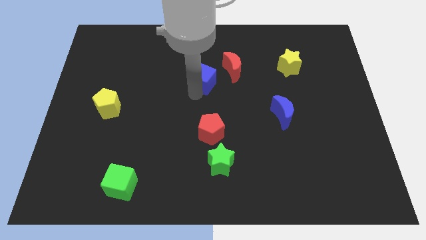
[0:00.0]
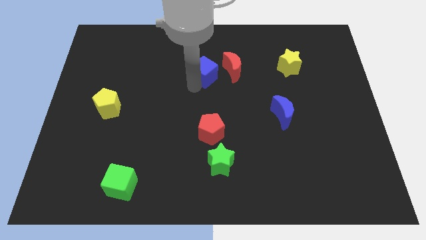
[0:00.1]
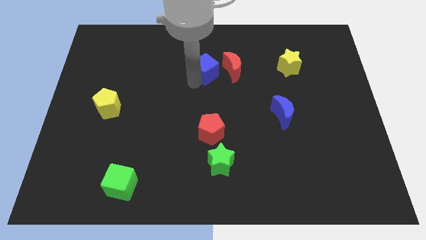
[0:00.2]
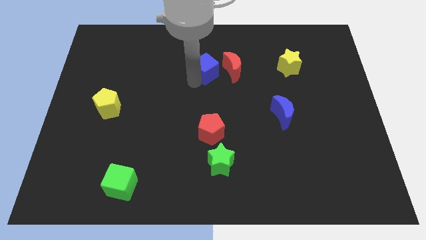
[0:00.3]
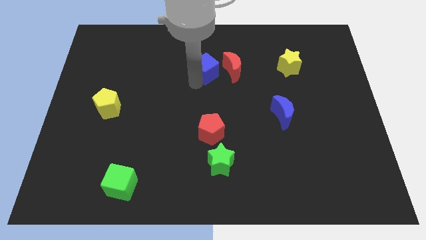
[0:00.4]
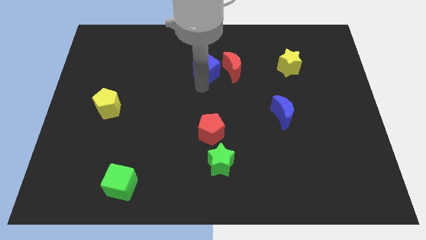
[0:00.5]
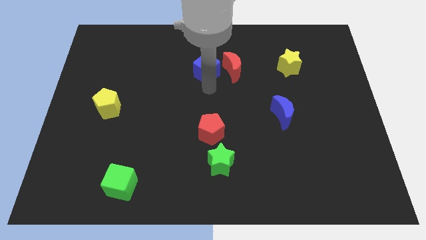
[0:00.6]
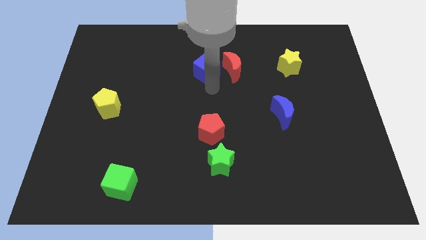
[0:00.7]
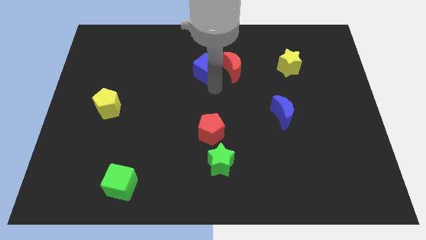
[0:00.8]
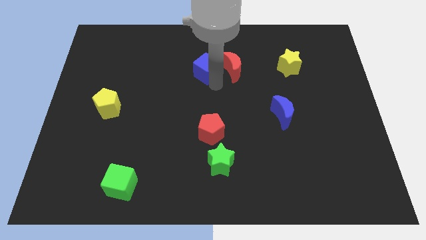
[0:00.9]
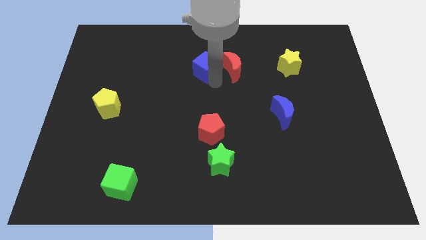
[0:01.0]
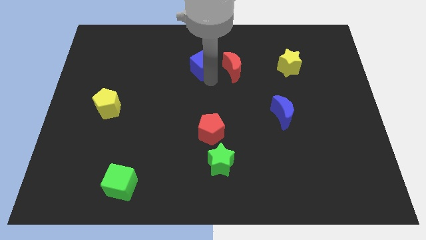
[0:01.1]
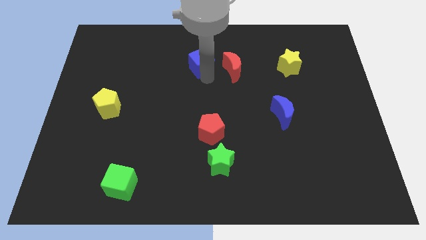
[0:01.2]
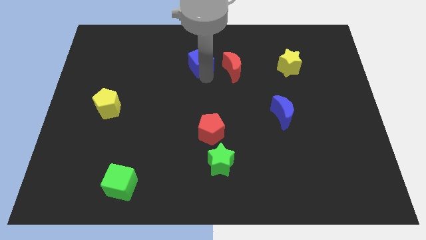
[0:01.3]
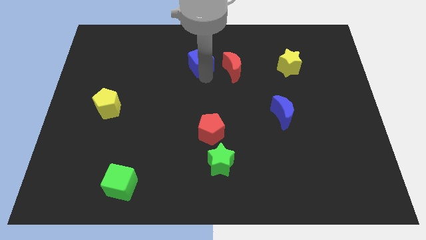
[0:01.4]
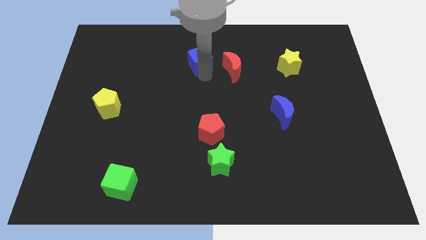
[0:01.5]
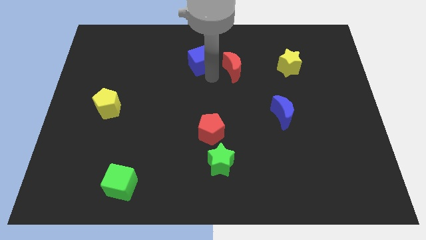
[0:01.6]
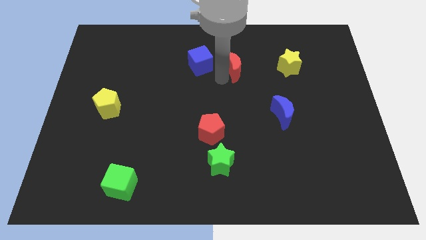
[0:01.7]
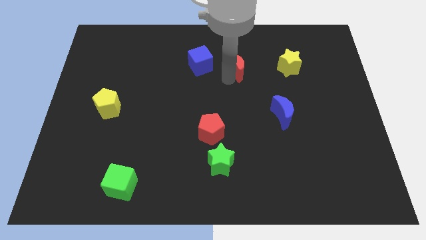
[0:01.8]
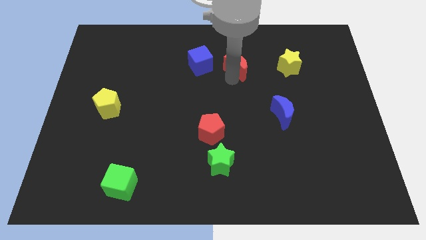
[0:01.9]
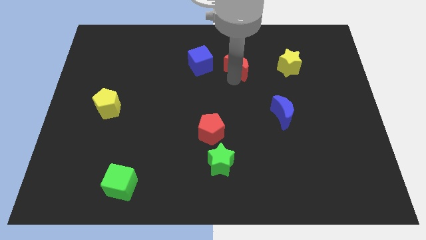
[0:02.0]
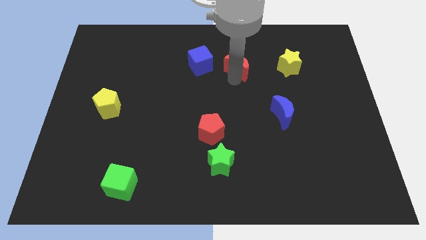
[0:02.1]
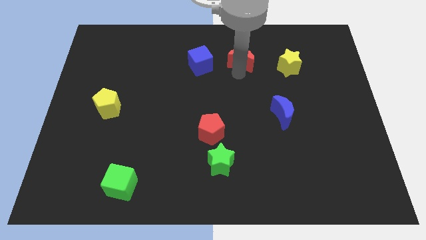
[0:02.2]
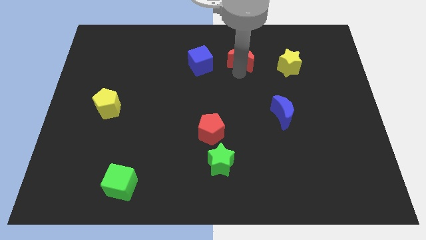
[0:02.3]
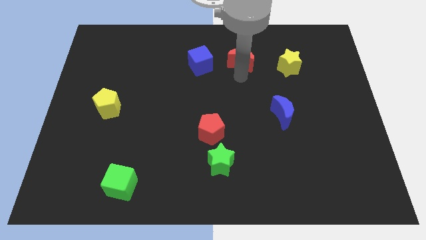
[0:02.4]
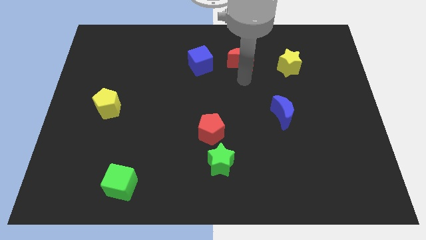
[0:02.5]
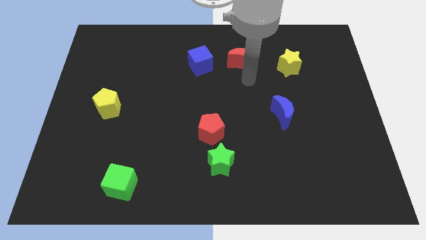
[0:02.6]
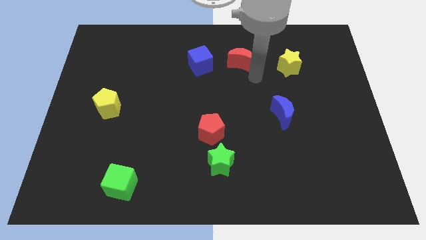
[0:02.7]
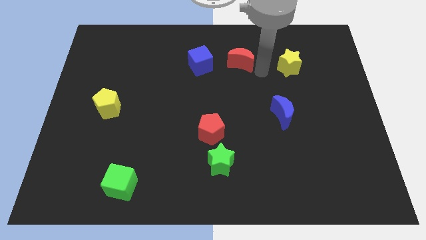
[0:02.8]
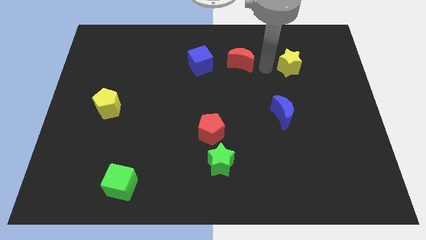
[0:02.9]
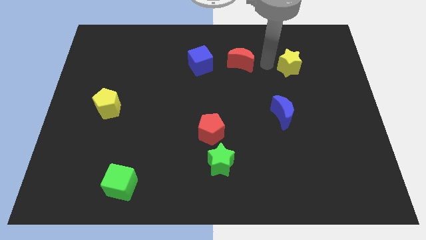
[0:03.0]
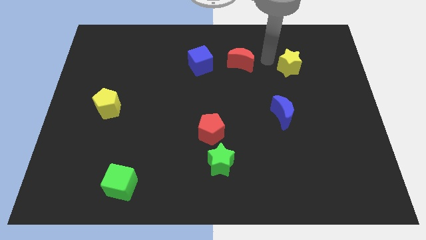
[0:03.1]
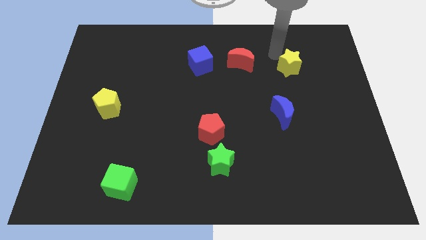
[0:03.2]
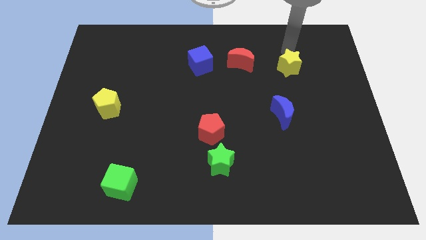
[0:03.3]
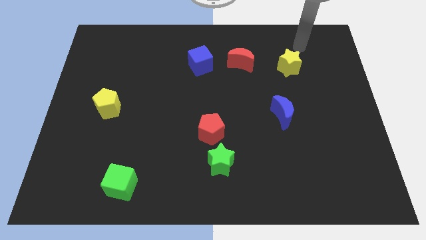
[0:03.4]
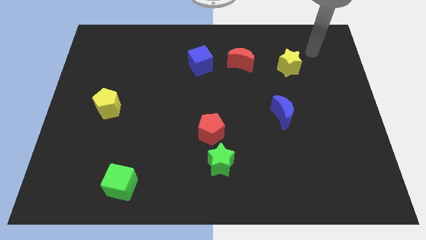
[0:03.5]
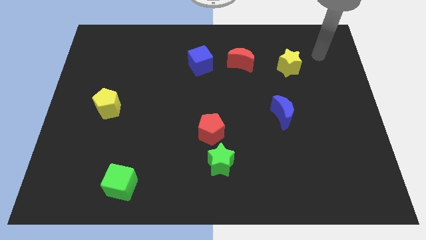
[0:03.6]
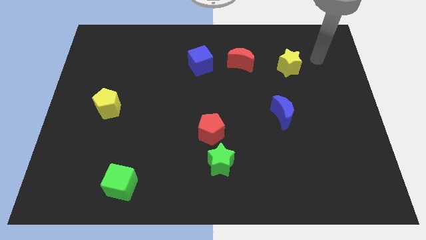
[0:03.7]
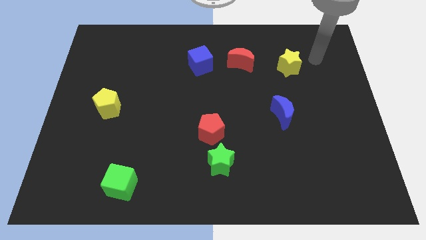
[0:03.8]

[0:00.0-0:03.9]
adjust the red moon and the blue cube parallel to each other

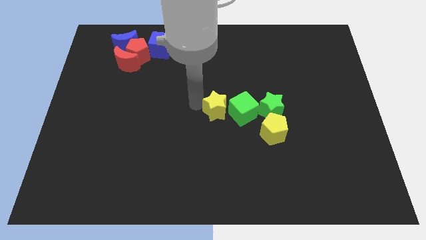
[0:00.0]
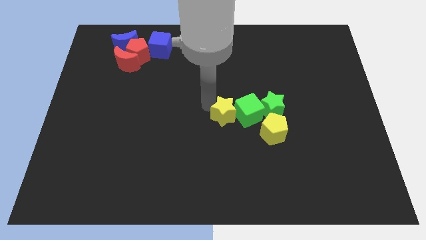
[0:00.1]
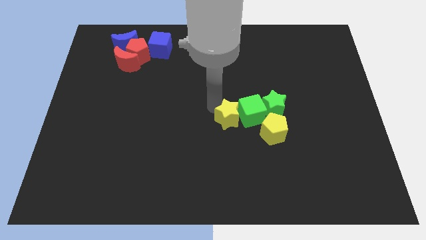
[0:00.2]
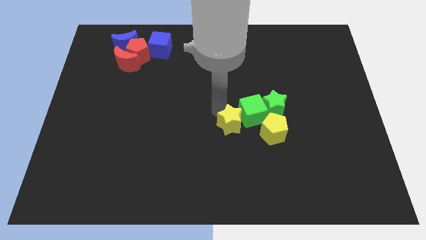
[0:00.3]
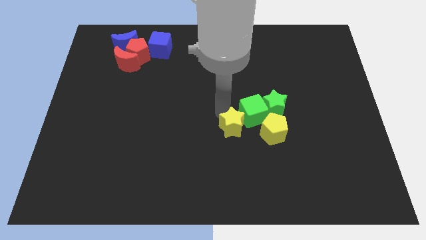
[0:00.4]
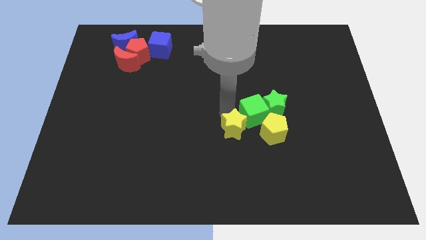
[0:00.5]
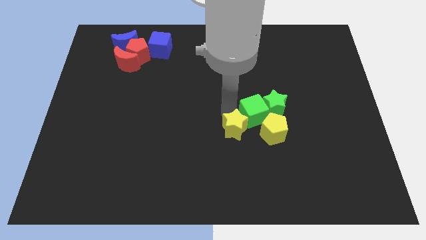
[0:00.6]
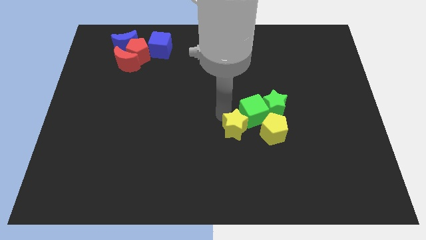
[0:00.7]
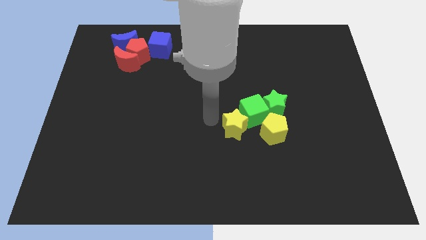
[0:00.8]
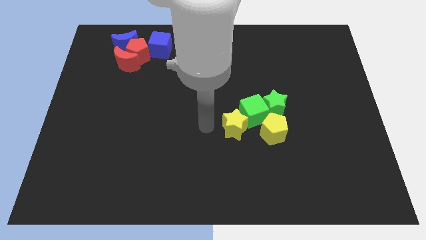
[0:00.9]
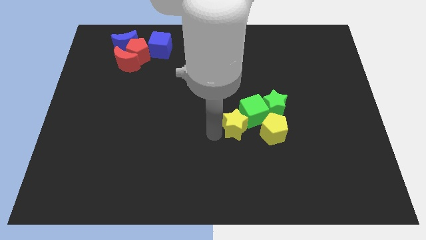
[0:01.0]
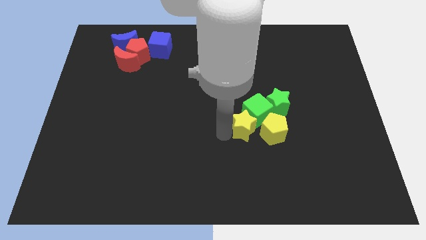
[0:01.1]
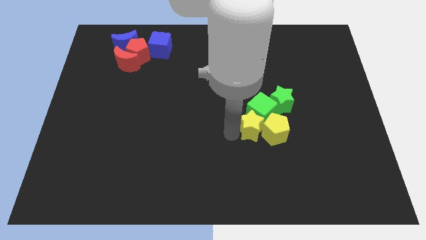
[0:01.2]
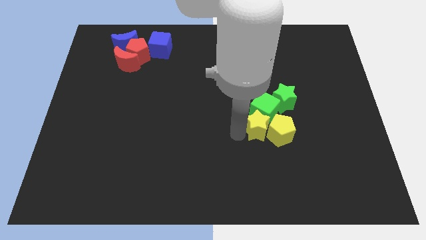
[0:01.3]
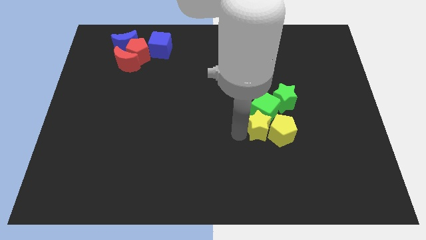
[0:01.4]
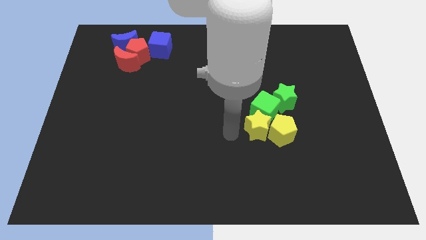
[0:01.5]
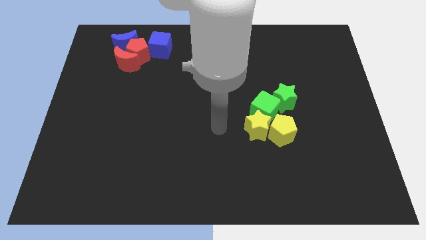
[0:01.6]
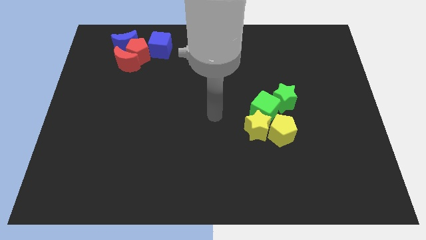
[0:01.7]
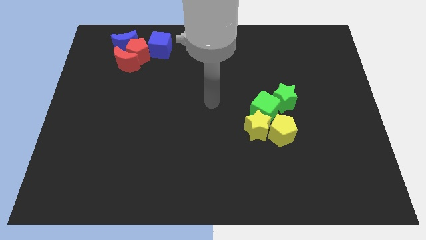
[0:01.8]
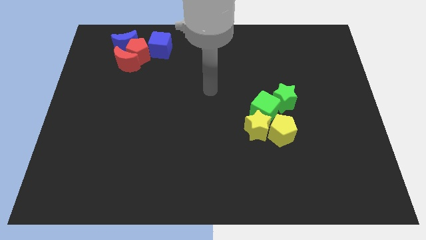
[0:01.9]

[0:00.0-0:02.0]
push the yellow star to the left side of the yellow pentagon

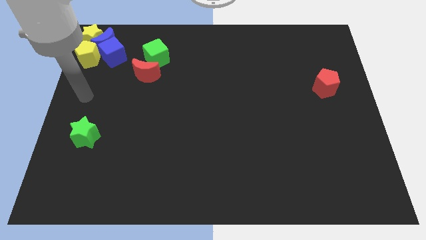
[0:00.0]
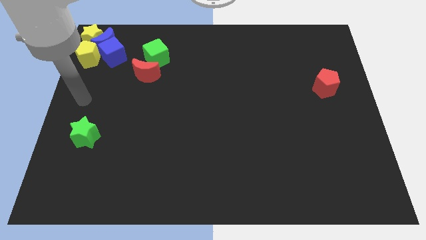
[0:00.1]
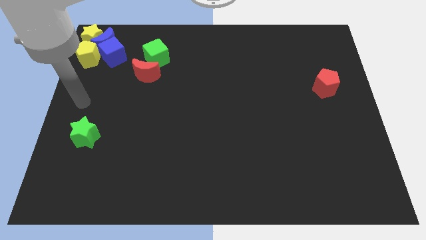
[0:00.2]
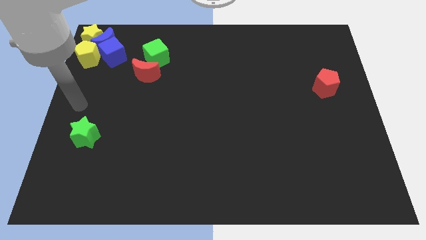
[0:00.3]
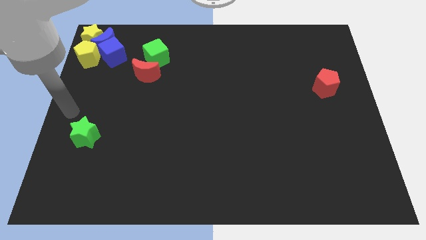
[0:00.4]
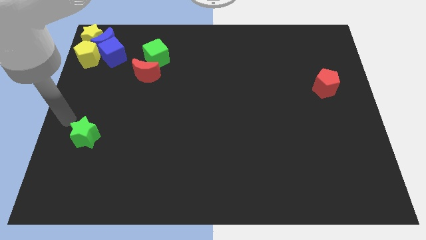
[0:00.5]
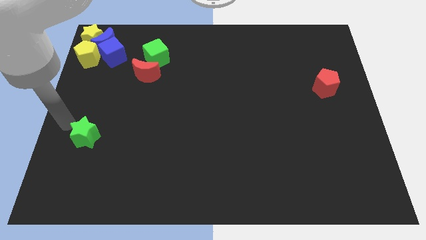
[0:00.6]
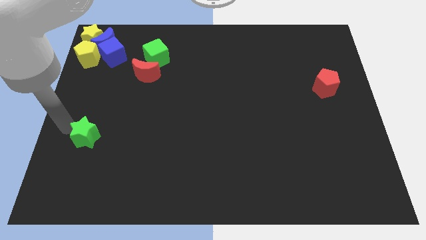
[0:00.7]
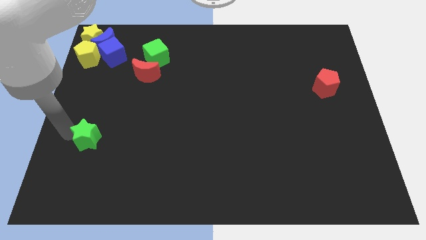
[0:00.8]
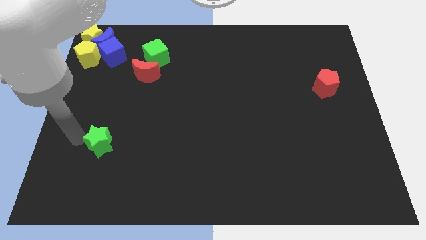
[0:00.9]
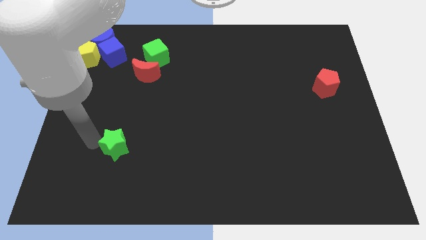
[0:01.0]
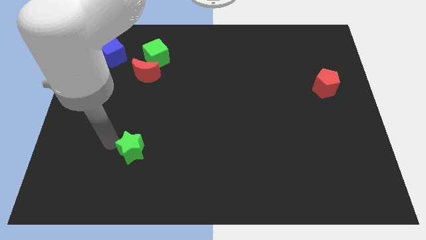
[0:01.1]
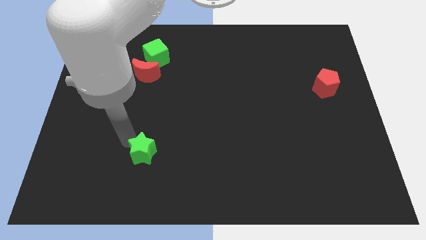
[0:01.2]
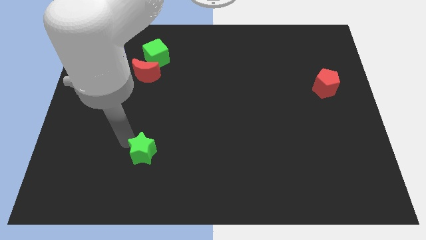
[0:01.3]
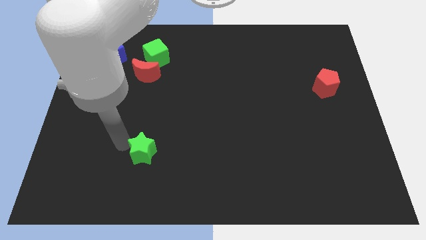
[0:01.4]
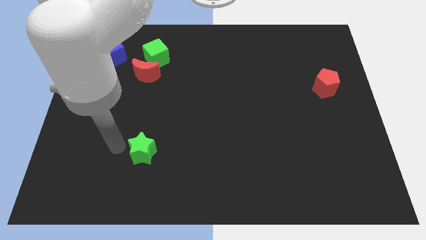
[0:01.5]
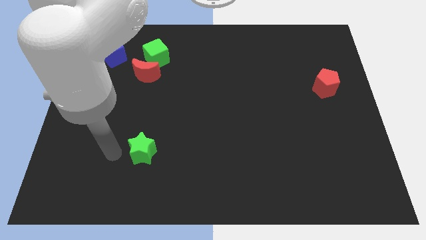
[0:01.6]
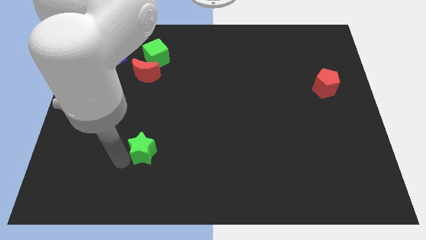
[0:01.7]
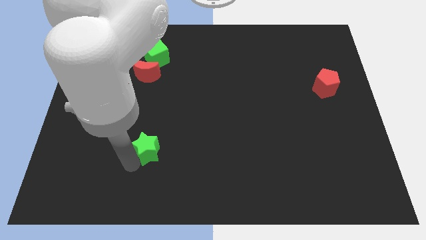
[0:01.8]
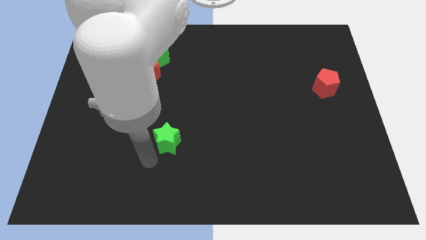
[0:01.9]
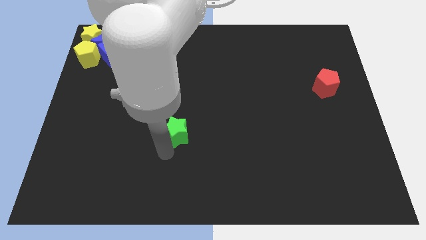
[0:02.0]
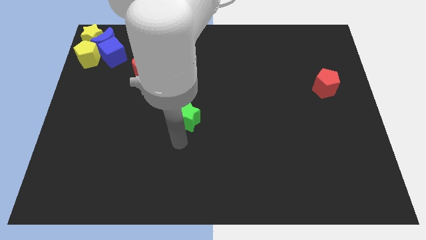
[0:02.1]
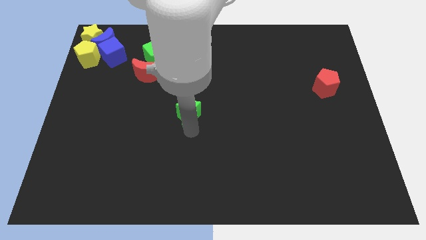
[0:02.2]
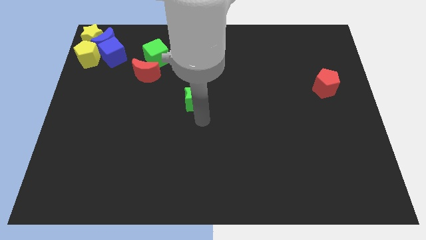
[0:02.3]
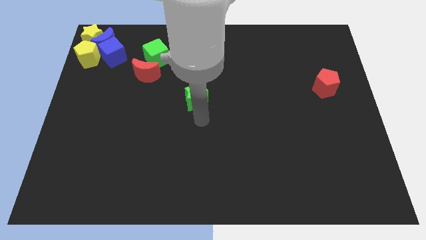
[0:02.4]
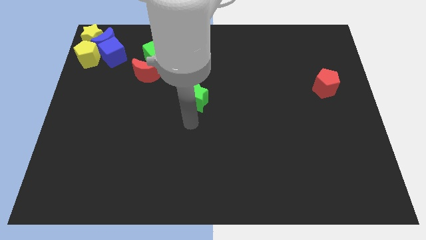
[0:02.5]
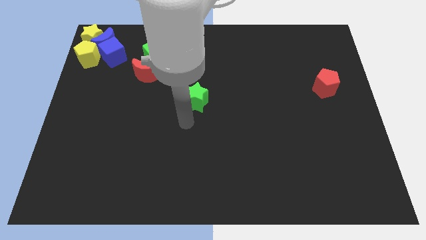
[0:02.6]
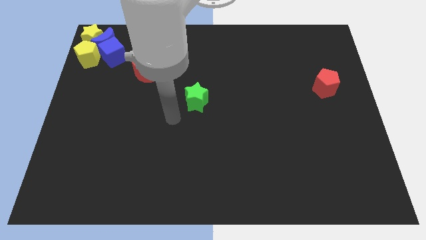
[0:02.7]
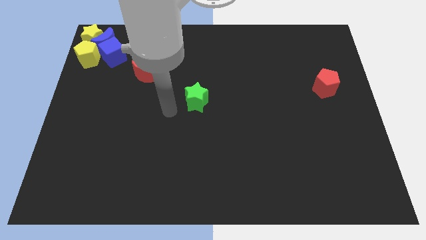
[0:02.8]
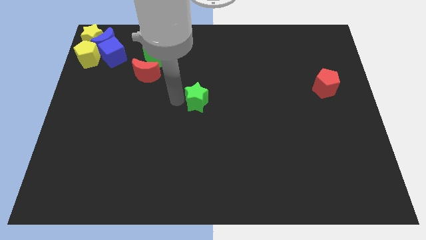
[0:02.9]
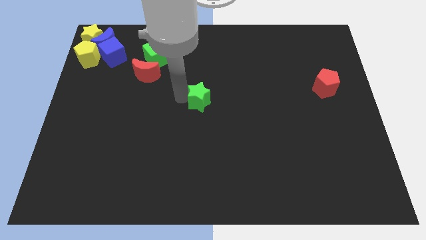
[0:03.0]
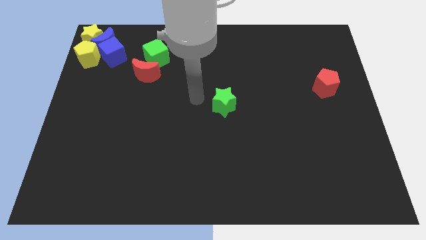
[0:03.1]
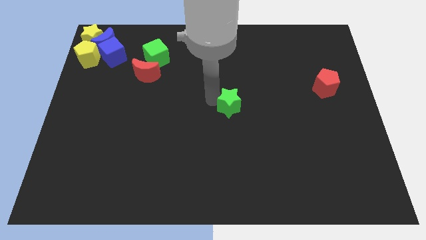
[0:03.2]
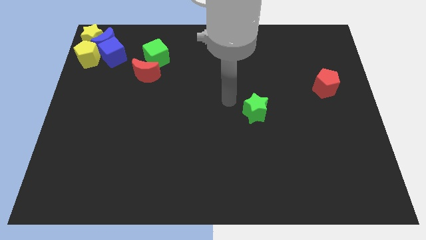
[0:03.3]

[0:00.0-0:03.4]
move the green star towards the center
